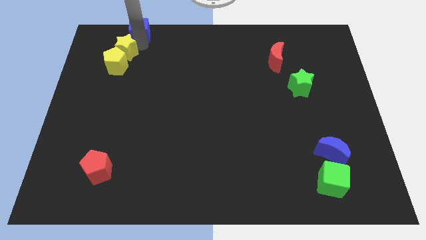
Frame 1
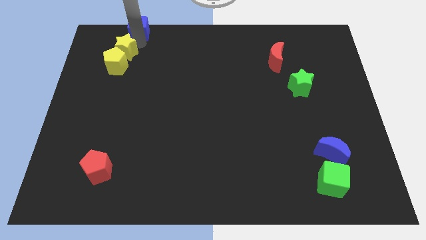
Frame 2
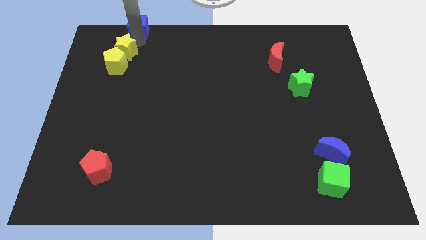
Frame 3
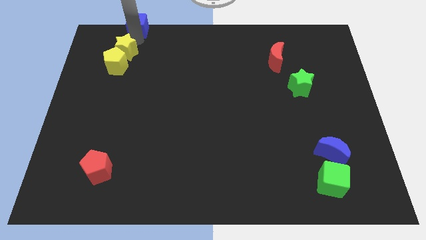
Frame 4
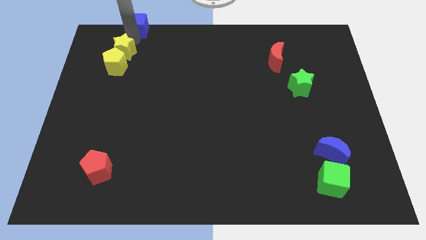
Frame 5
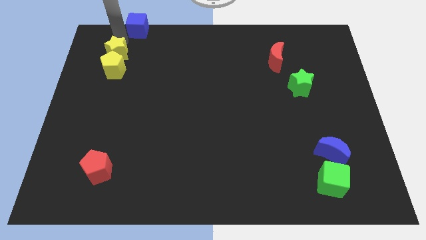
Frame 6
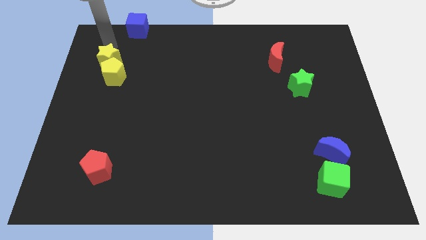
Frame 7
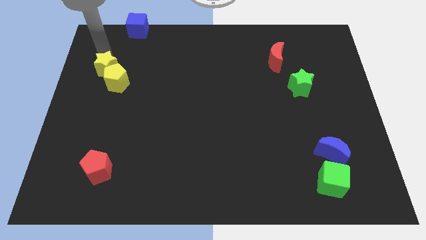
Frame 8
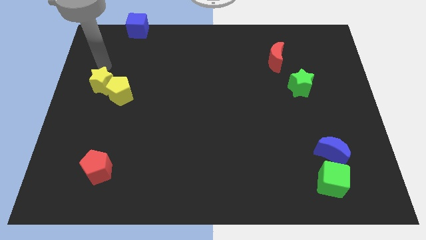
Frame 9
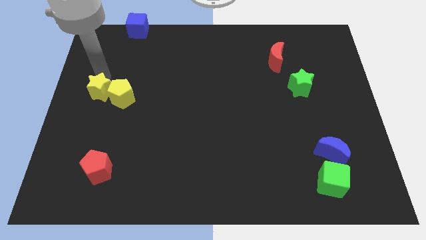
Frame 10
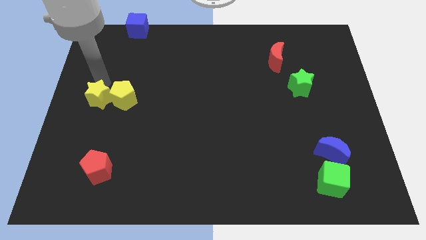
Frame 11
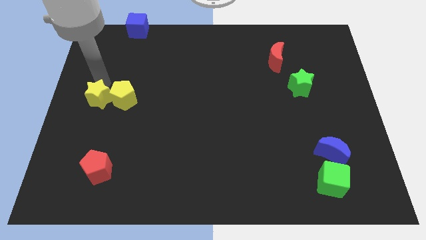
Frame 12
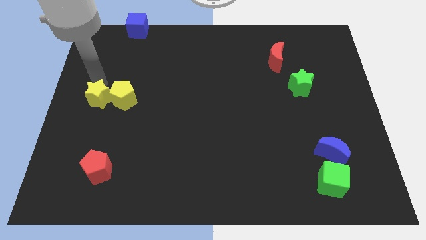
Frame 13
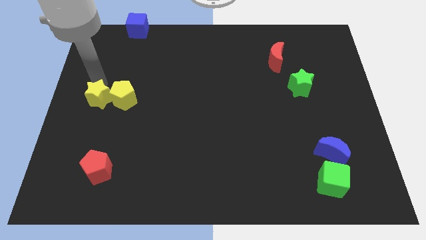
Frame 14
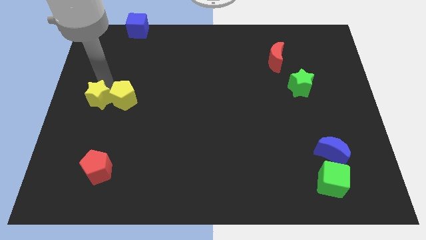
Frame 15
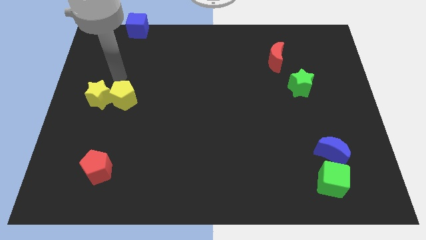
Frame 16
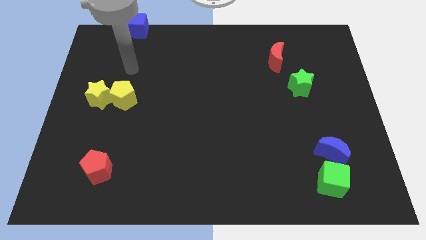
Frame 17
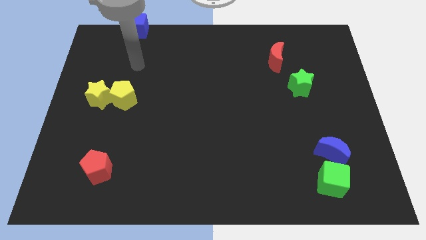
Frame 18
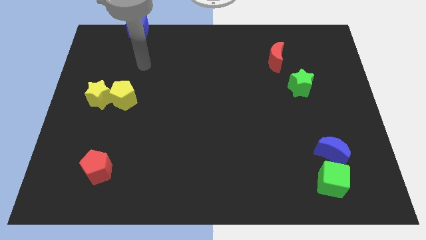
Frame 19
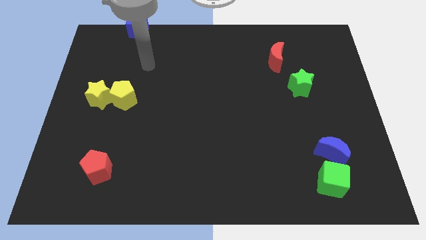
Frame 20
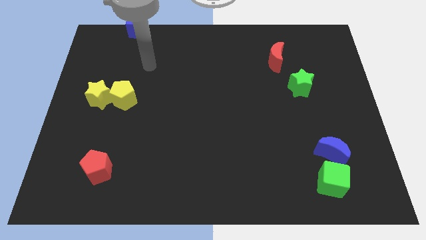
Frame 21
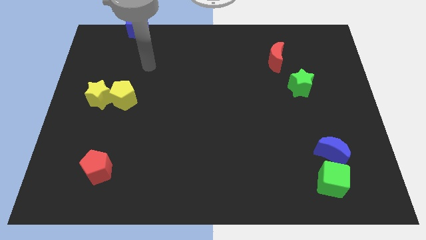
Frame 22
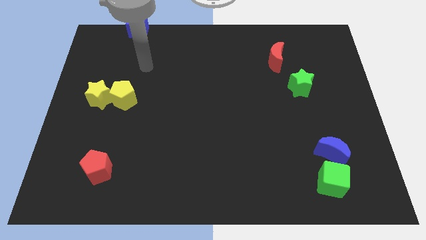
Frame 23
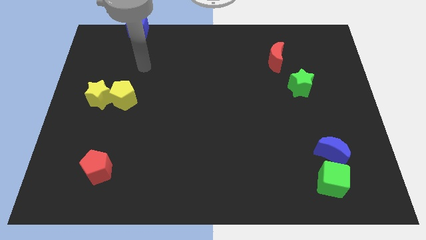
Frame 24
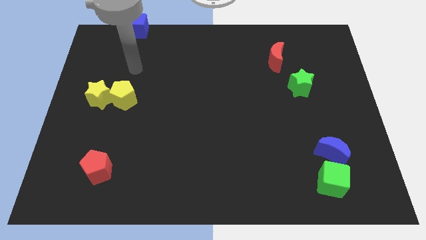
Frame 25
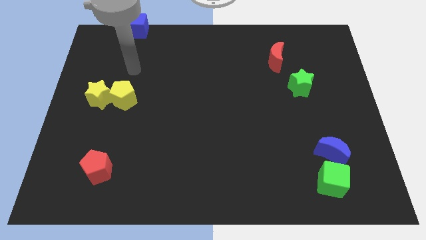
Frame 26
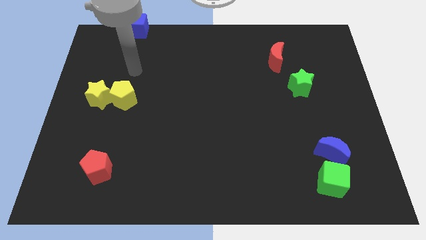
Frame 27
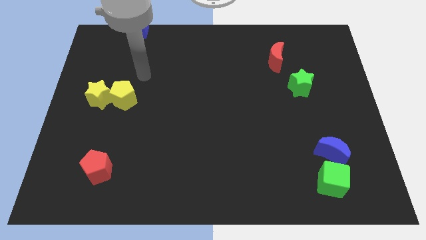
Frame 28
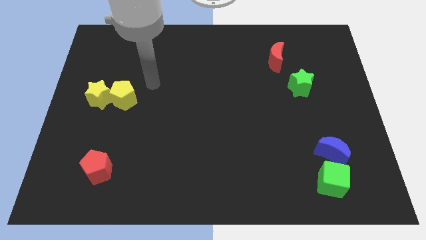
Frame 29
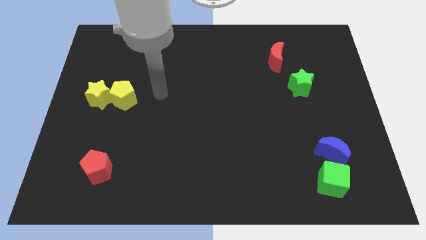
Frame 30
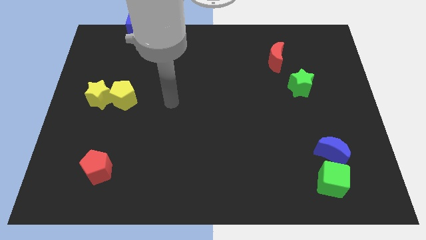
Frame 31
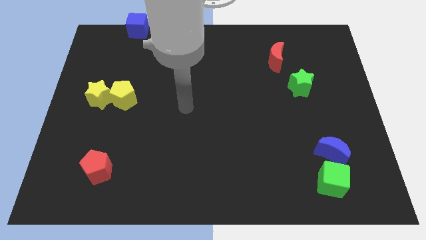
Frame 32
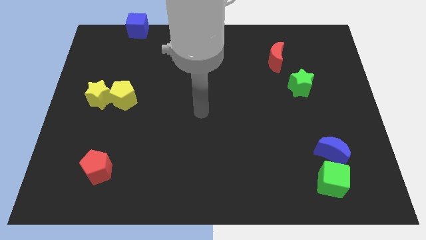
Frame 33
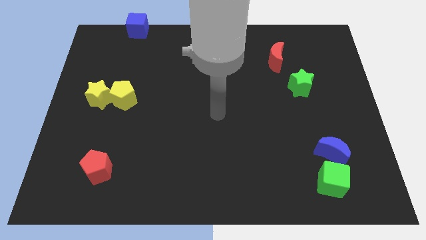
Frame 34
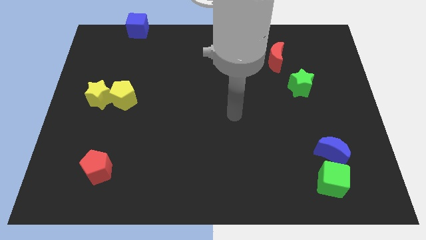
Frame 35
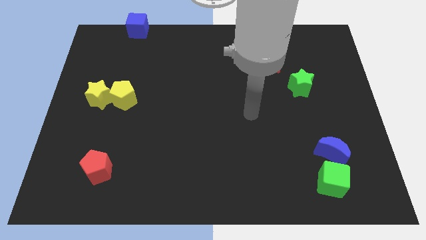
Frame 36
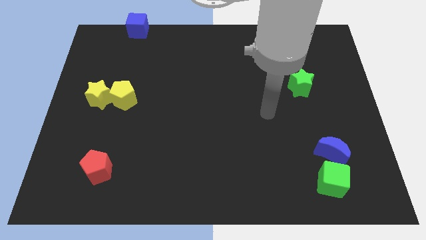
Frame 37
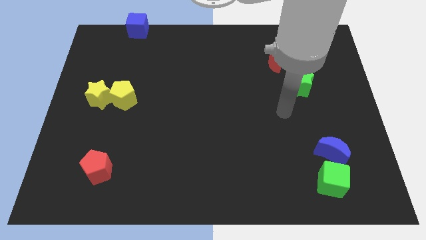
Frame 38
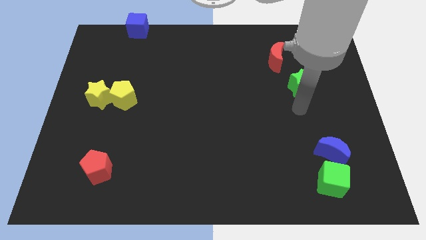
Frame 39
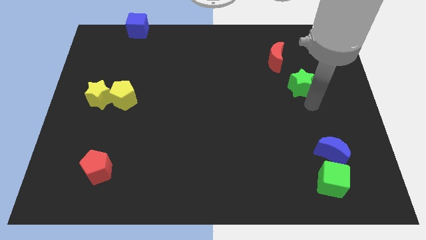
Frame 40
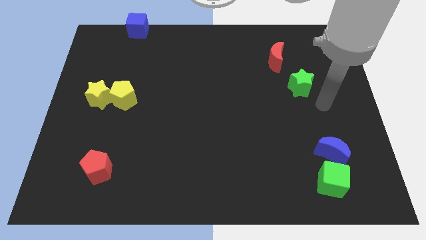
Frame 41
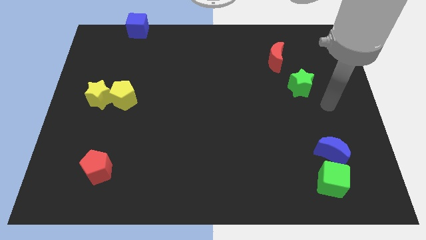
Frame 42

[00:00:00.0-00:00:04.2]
move yellow pentagon with the yellow star slightly towards the bottom

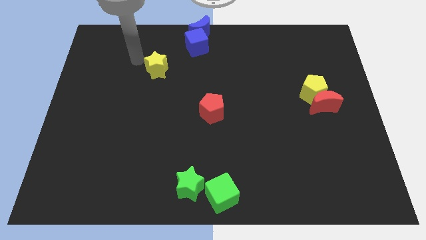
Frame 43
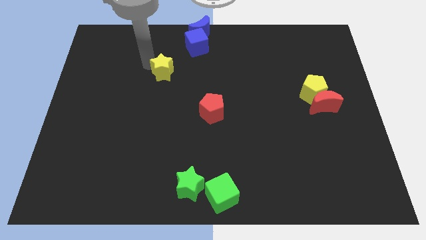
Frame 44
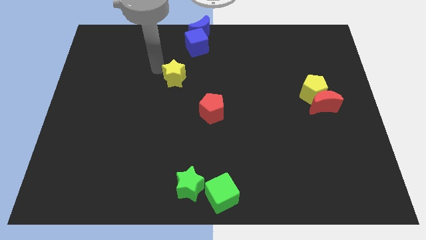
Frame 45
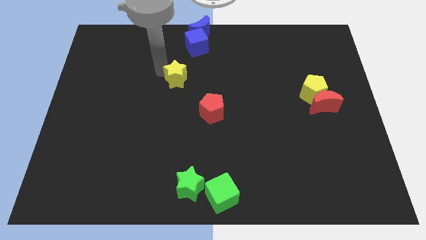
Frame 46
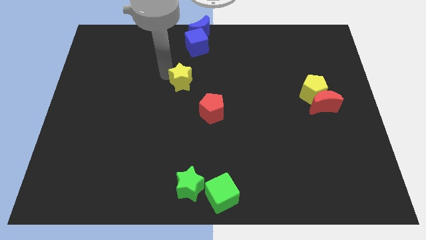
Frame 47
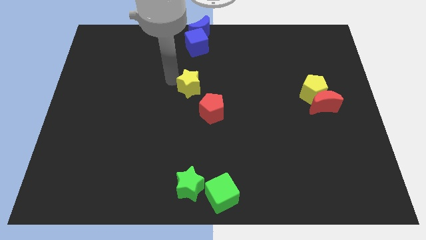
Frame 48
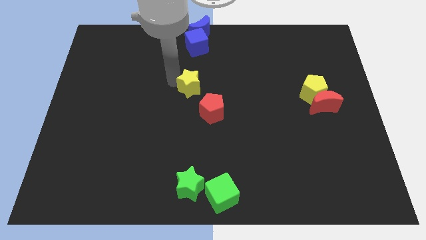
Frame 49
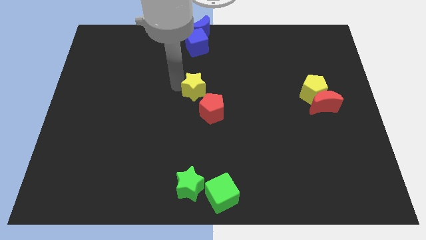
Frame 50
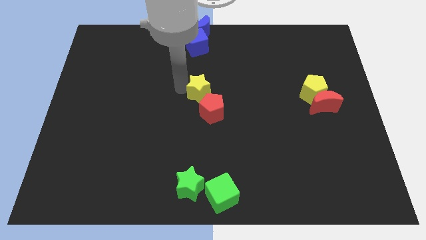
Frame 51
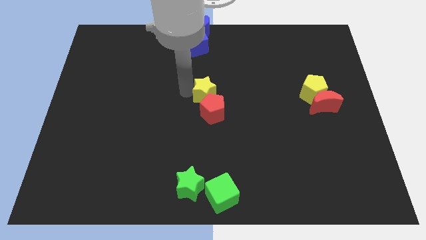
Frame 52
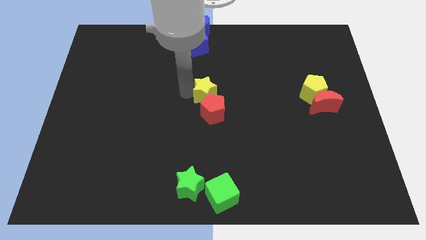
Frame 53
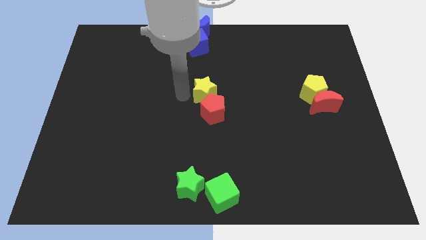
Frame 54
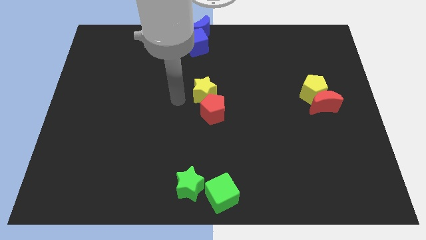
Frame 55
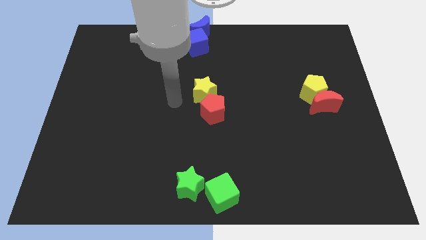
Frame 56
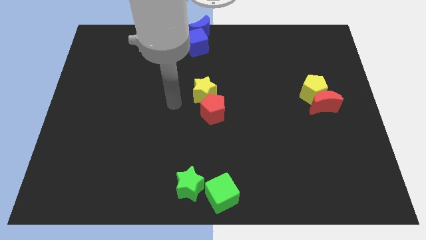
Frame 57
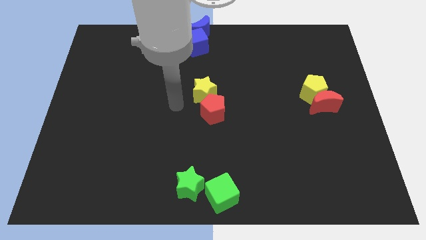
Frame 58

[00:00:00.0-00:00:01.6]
place the yellow star above the red pentagon

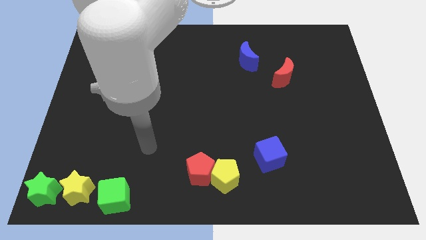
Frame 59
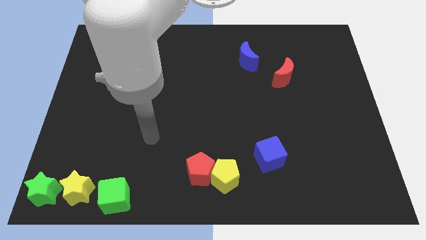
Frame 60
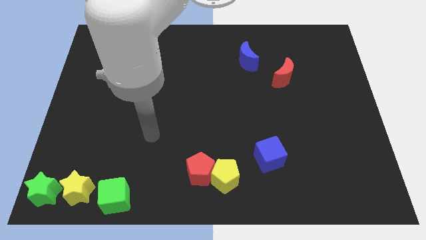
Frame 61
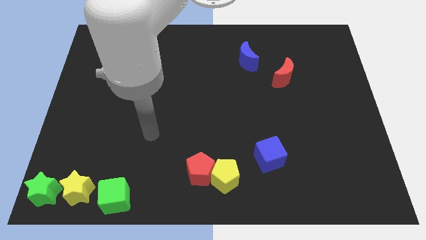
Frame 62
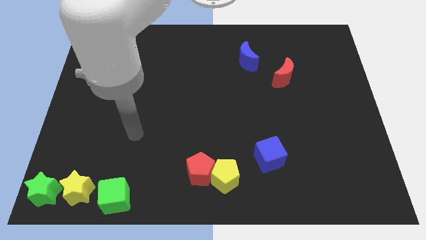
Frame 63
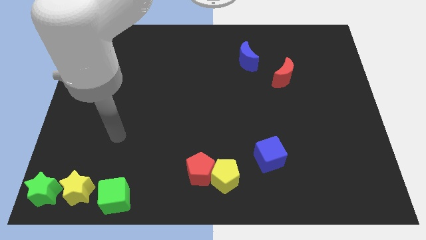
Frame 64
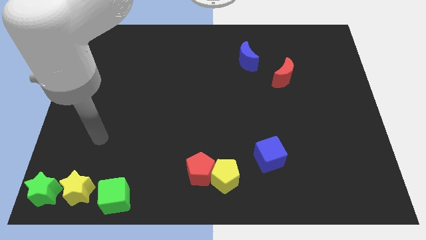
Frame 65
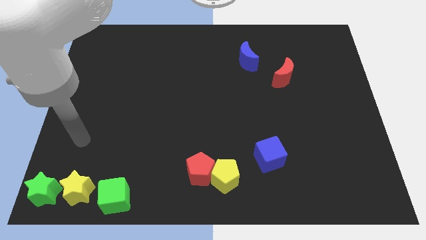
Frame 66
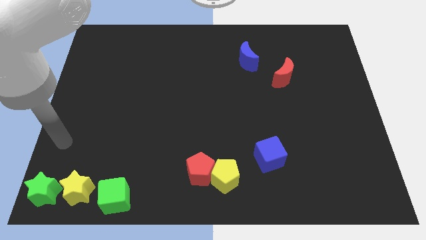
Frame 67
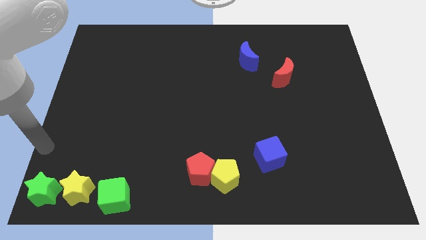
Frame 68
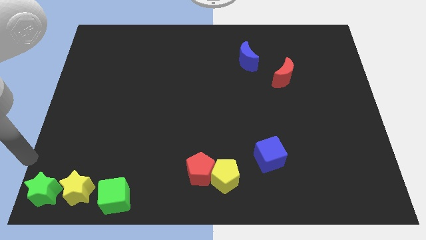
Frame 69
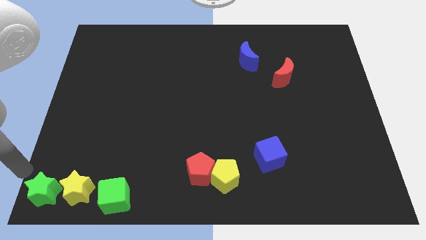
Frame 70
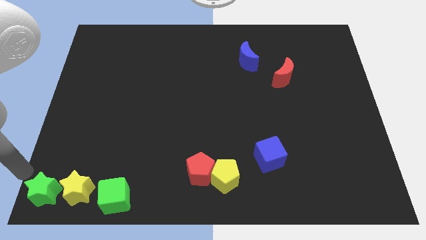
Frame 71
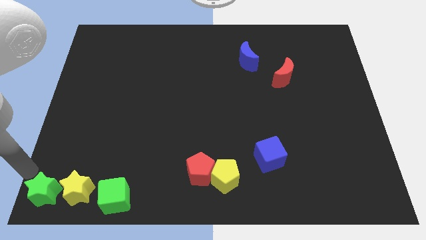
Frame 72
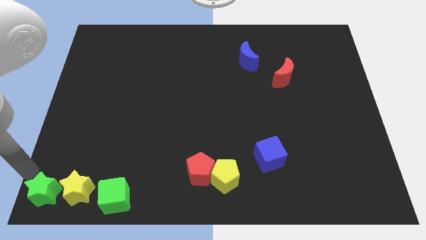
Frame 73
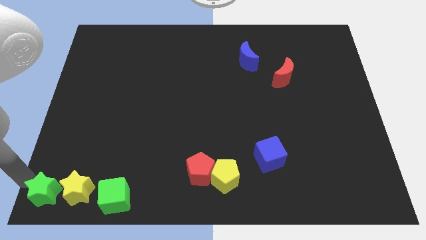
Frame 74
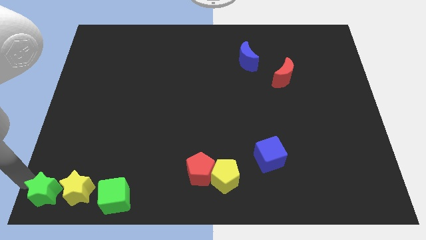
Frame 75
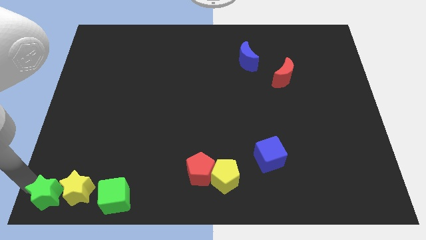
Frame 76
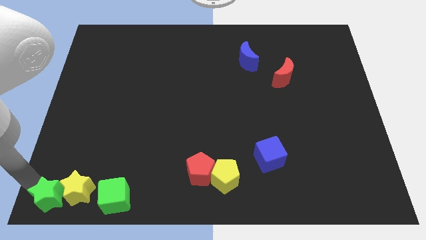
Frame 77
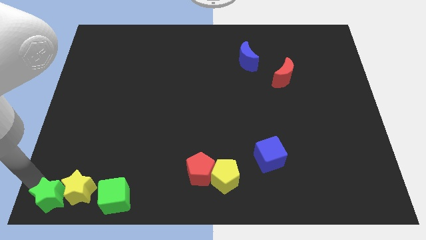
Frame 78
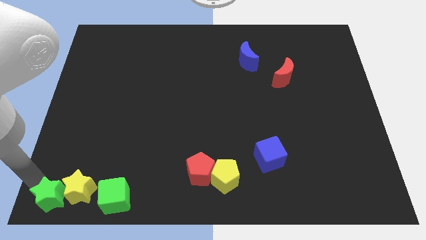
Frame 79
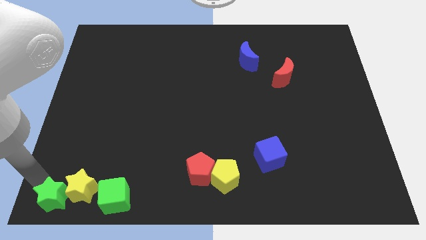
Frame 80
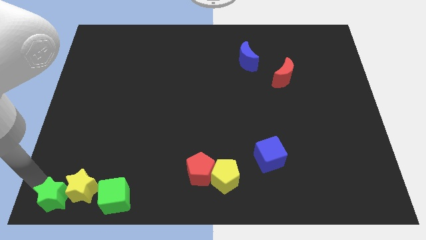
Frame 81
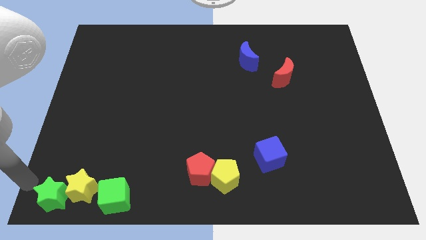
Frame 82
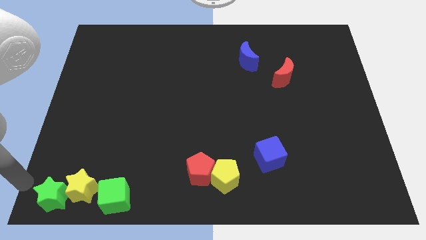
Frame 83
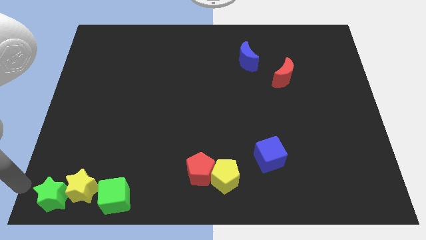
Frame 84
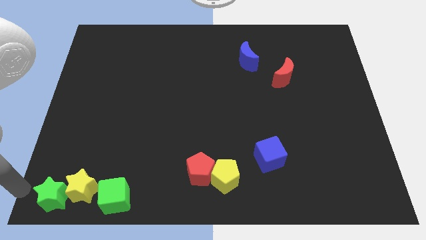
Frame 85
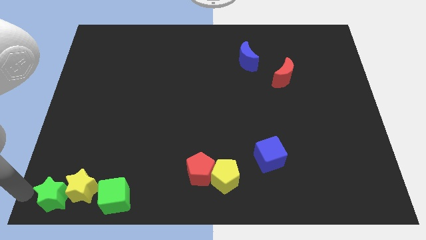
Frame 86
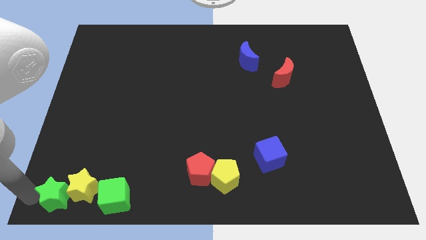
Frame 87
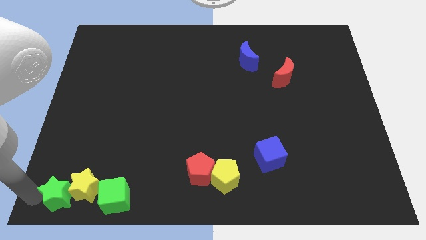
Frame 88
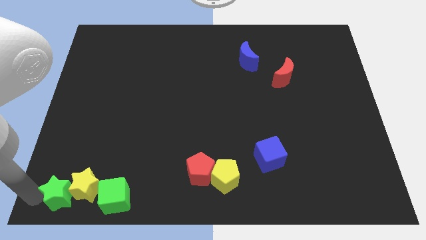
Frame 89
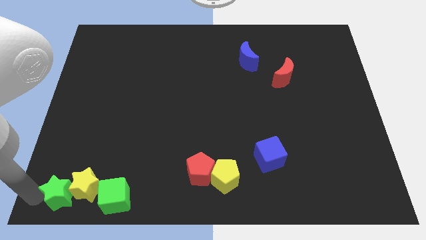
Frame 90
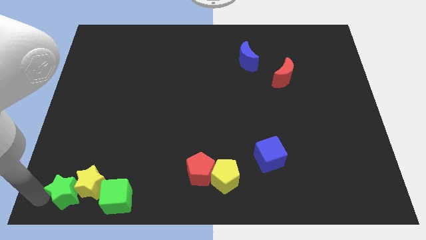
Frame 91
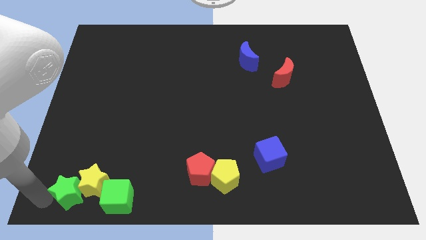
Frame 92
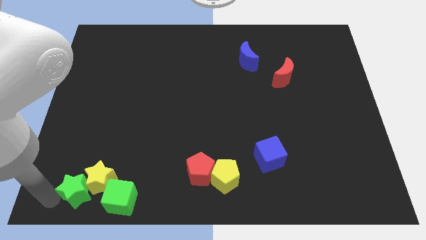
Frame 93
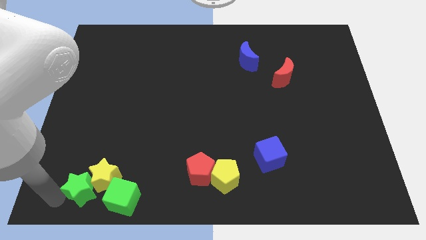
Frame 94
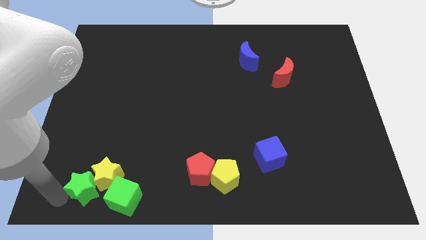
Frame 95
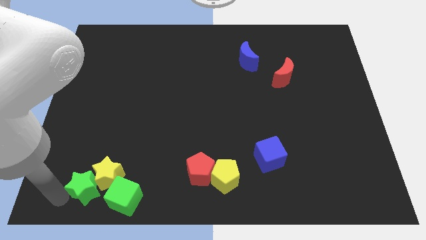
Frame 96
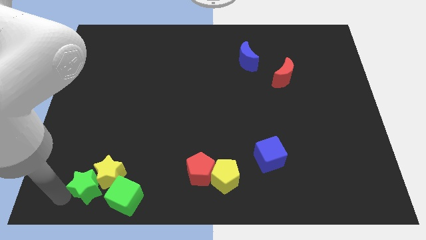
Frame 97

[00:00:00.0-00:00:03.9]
make a group of green star yellow star and green cube
